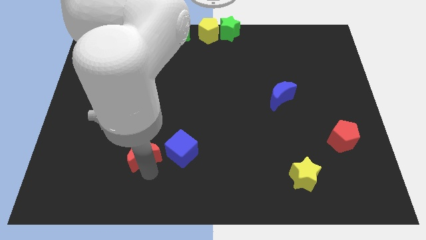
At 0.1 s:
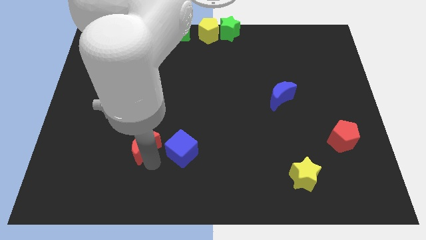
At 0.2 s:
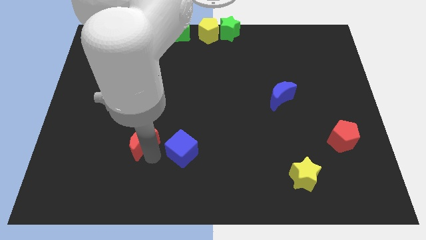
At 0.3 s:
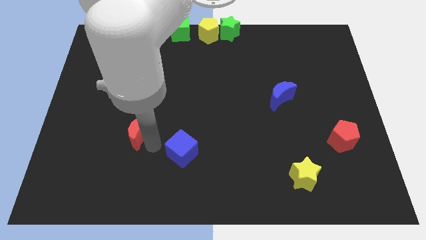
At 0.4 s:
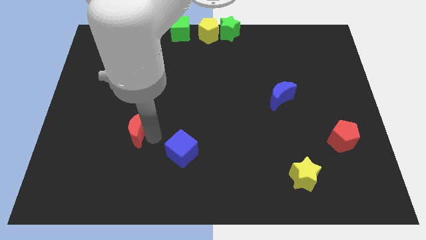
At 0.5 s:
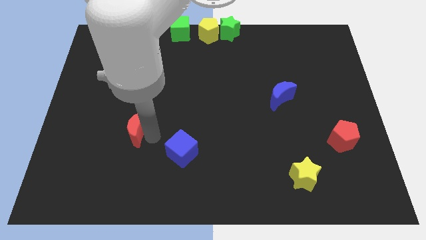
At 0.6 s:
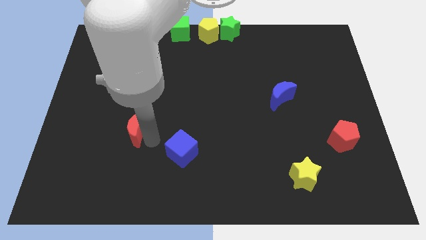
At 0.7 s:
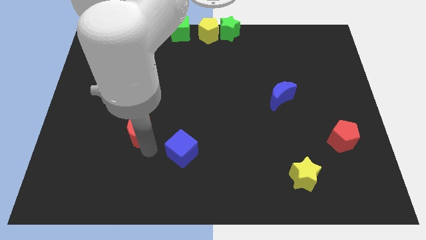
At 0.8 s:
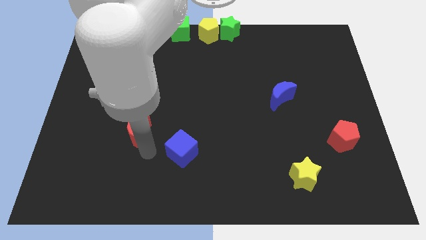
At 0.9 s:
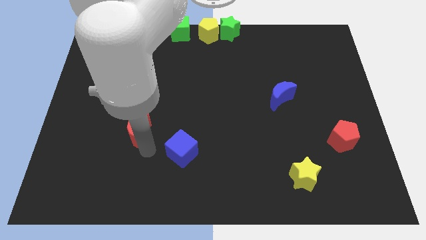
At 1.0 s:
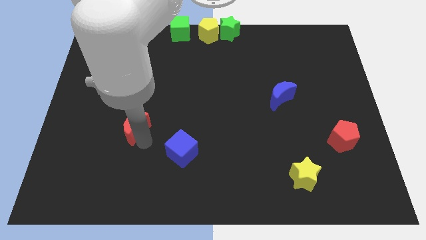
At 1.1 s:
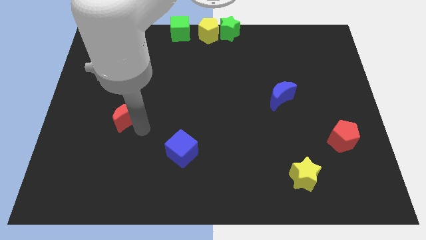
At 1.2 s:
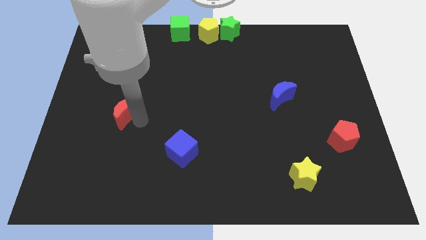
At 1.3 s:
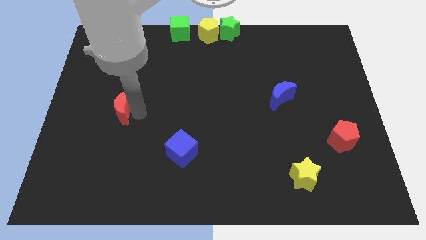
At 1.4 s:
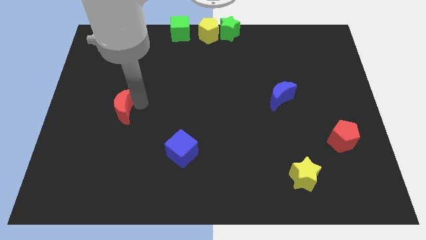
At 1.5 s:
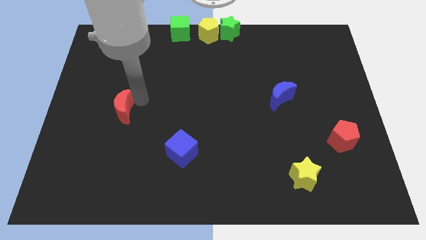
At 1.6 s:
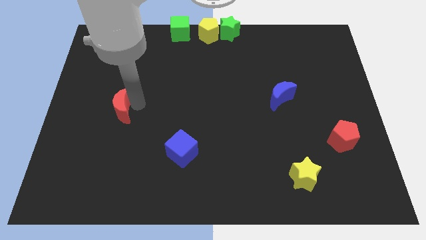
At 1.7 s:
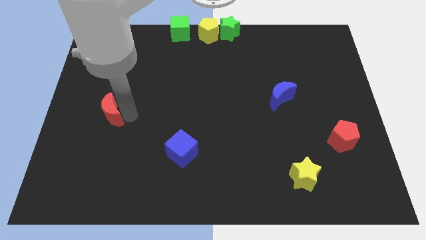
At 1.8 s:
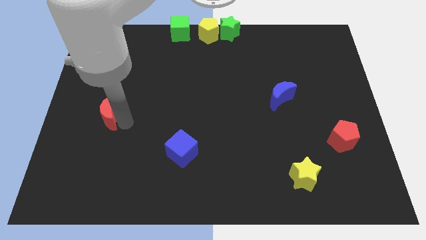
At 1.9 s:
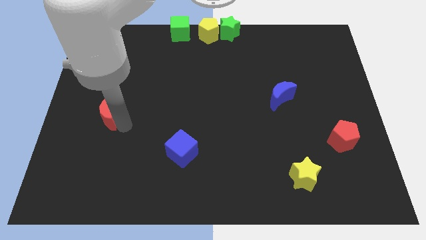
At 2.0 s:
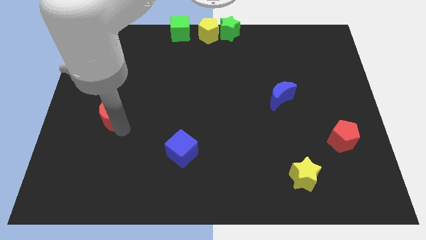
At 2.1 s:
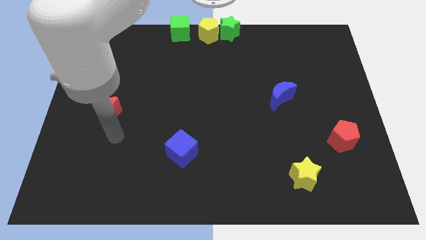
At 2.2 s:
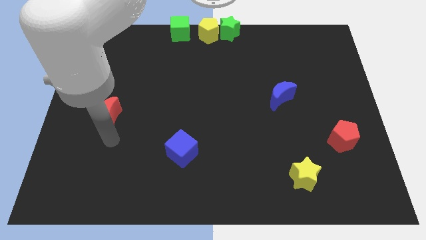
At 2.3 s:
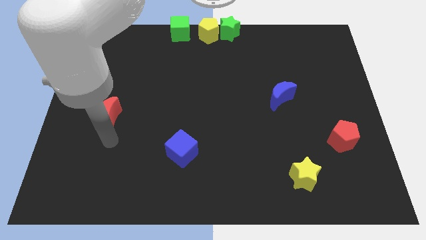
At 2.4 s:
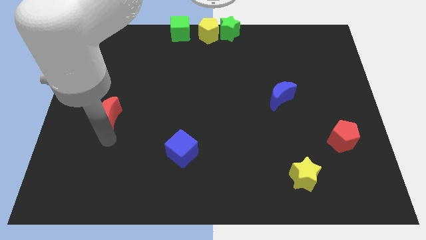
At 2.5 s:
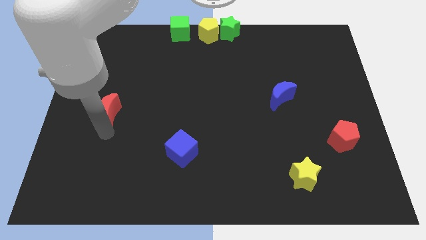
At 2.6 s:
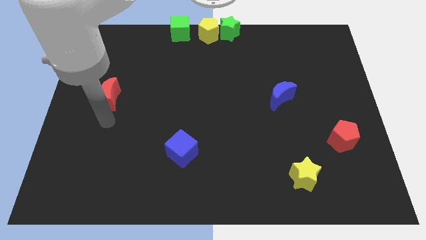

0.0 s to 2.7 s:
place the red crescent at left center of the board

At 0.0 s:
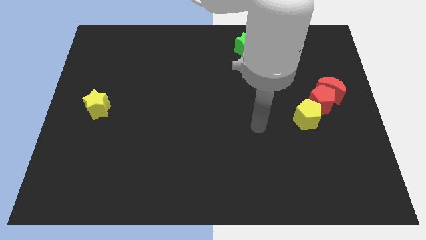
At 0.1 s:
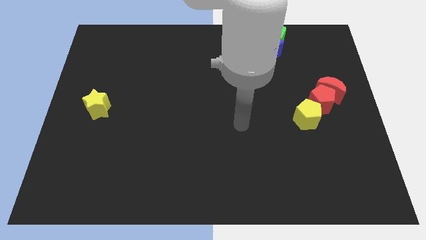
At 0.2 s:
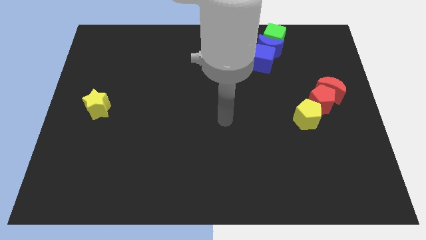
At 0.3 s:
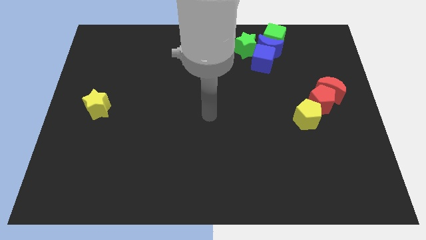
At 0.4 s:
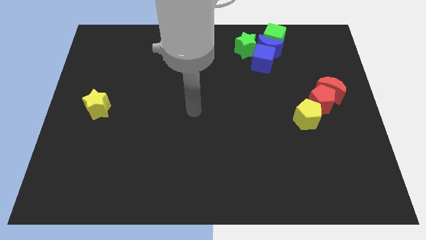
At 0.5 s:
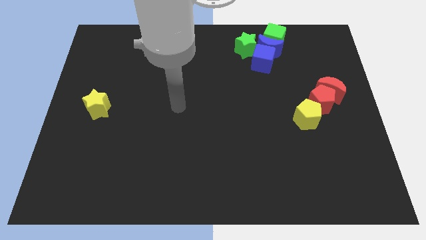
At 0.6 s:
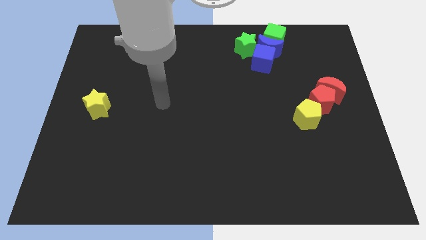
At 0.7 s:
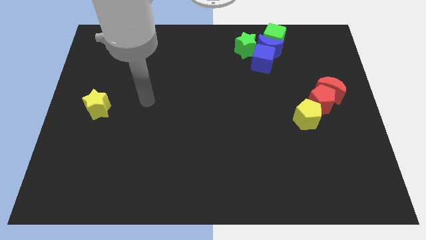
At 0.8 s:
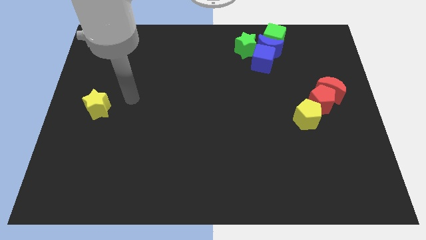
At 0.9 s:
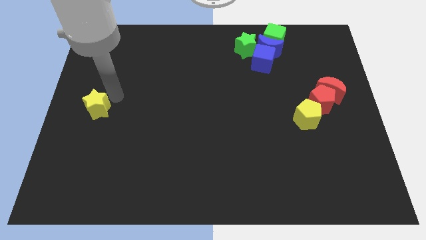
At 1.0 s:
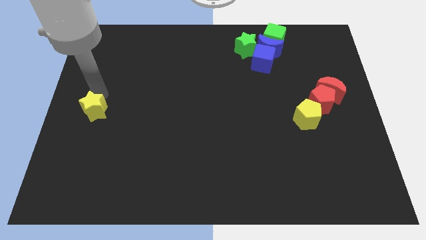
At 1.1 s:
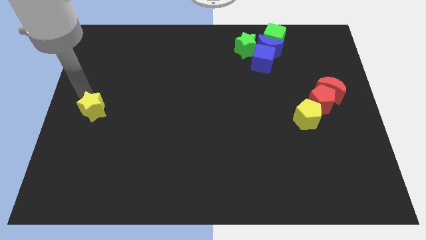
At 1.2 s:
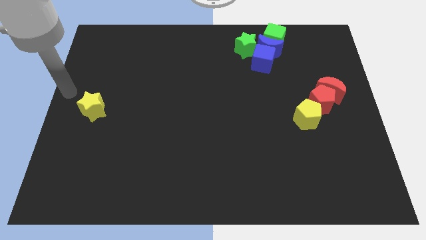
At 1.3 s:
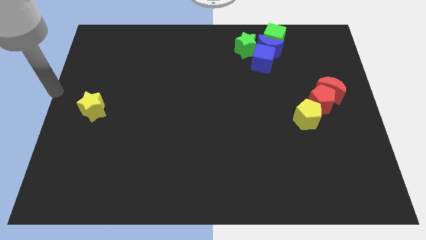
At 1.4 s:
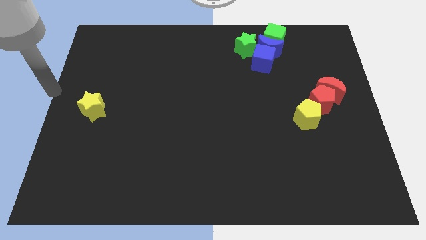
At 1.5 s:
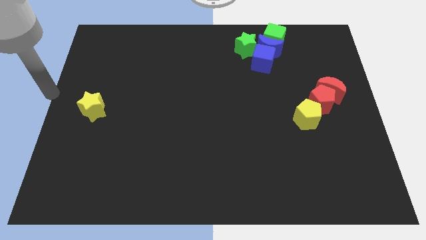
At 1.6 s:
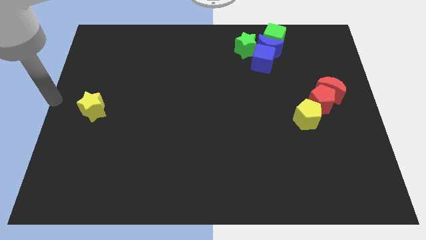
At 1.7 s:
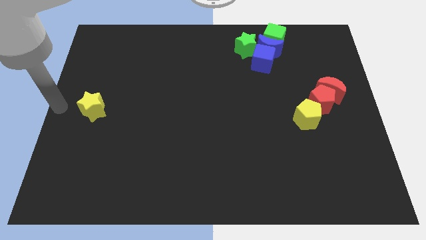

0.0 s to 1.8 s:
point your hand at the center left of the board

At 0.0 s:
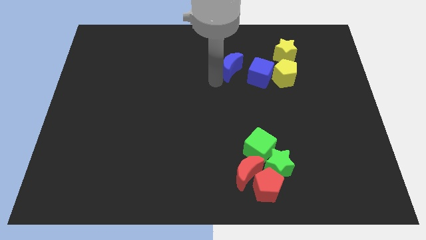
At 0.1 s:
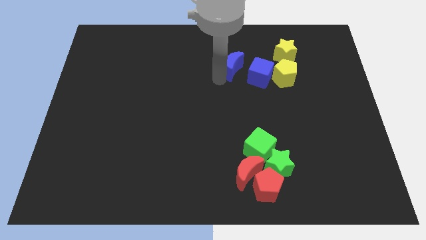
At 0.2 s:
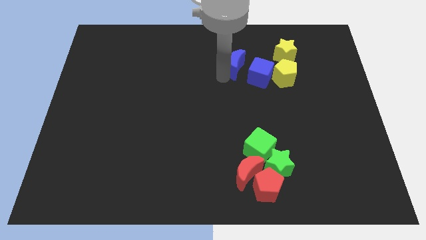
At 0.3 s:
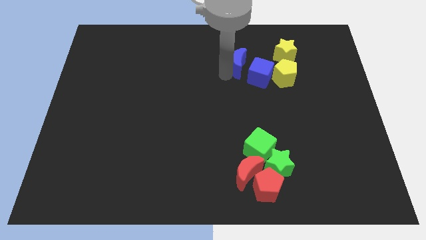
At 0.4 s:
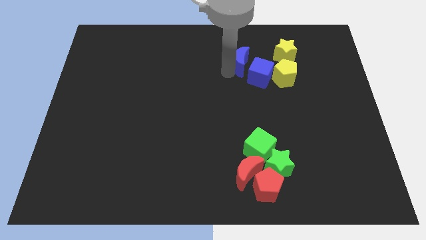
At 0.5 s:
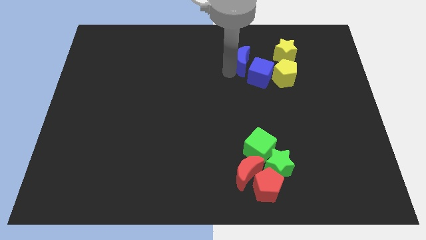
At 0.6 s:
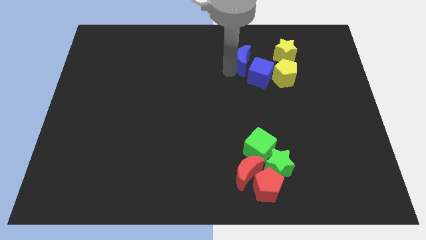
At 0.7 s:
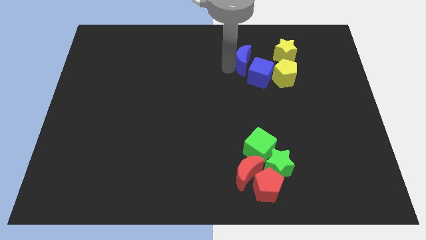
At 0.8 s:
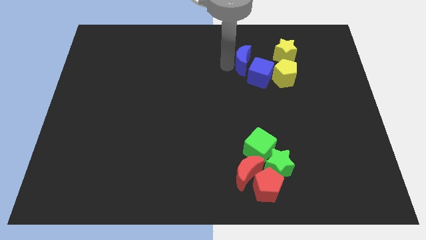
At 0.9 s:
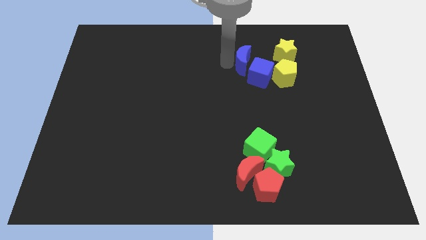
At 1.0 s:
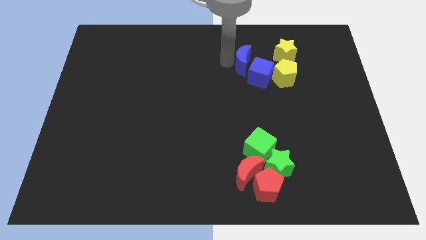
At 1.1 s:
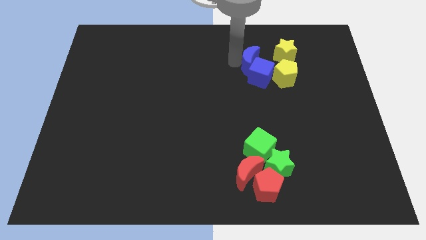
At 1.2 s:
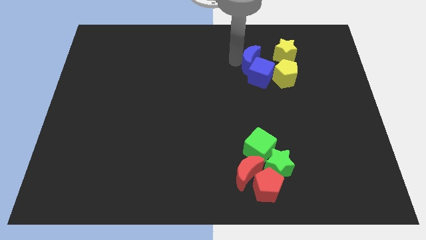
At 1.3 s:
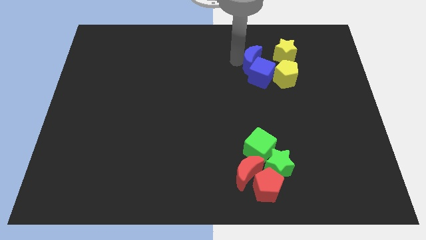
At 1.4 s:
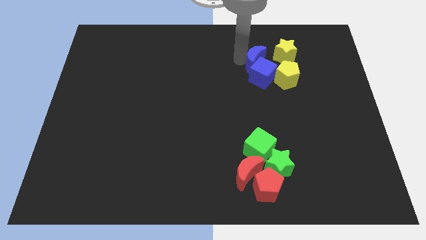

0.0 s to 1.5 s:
slide the blue crescent into the blue cube

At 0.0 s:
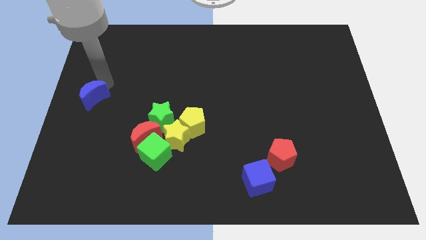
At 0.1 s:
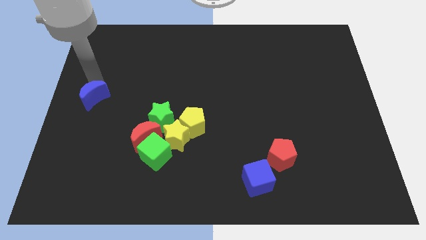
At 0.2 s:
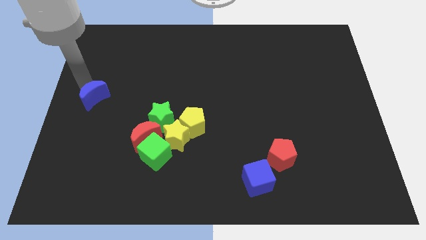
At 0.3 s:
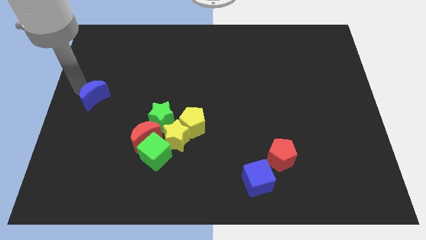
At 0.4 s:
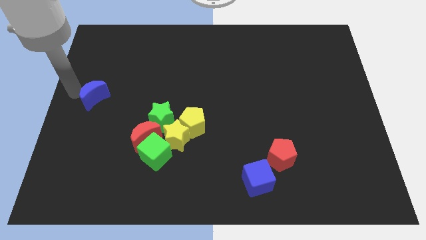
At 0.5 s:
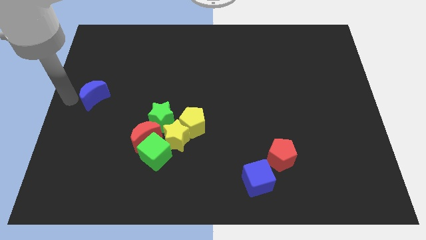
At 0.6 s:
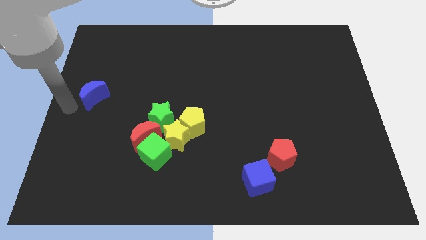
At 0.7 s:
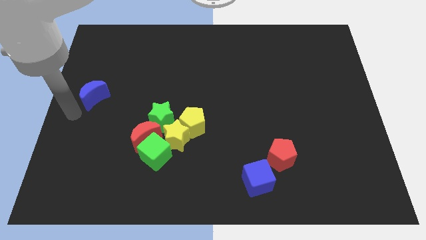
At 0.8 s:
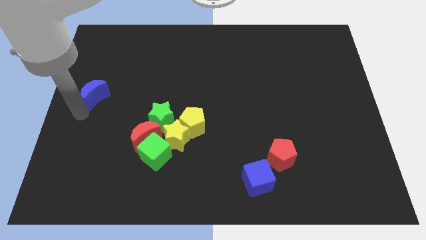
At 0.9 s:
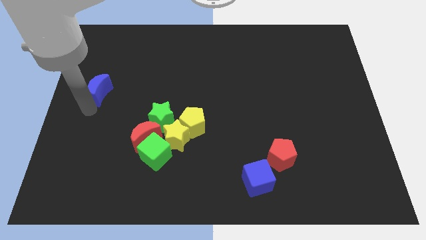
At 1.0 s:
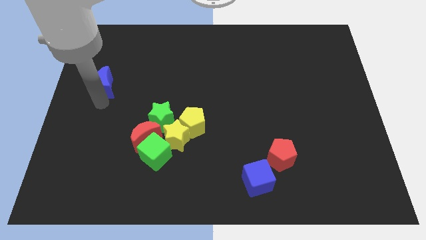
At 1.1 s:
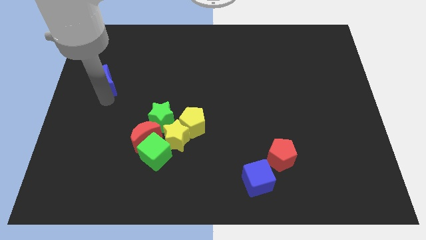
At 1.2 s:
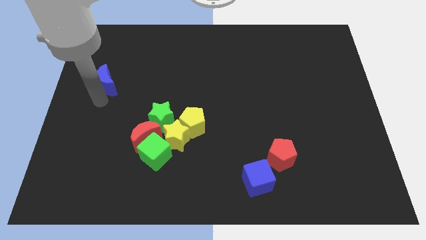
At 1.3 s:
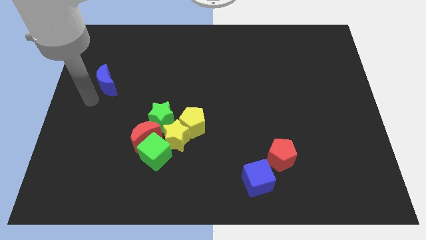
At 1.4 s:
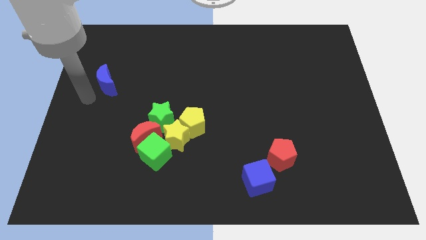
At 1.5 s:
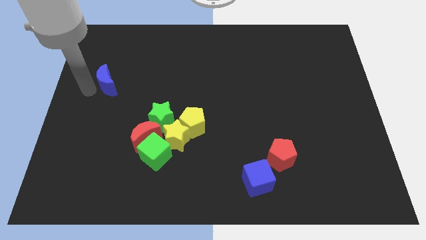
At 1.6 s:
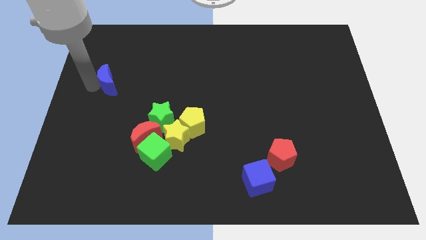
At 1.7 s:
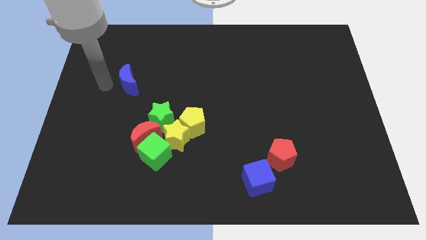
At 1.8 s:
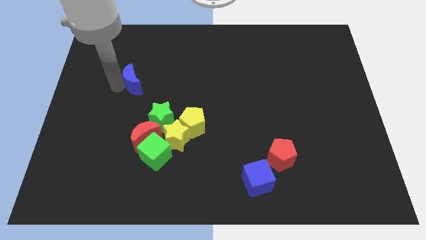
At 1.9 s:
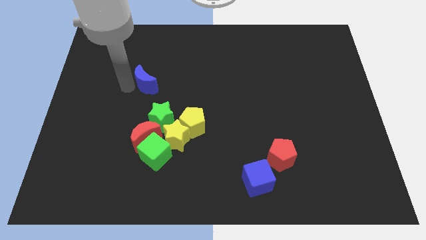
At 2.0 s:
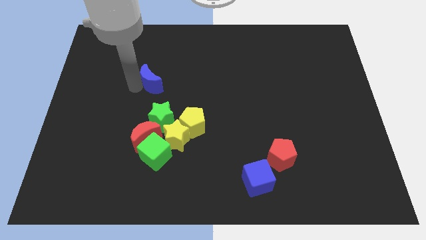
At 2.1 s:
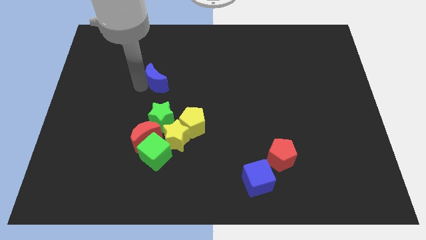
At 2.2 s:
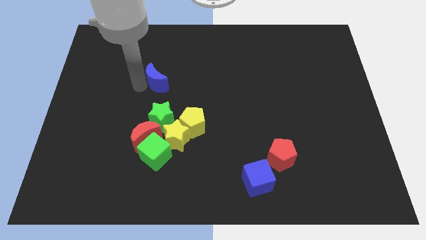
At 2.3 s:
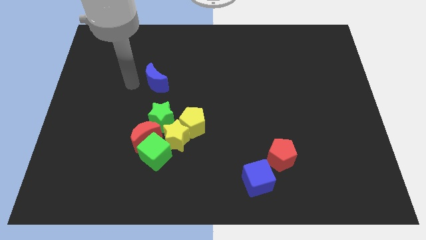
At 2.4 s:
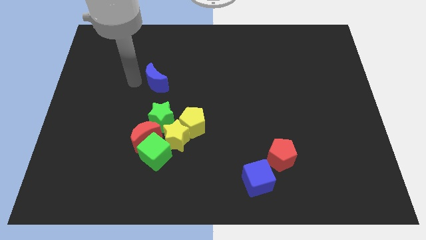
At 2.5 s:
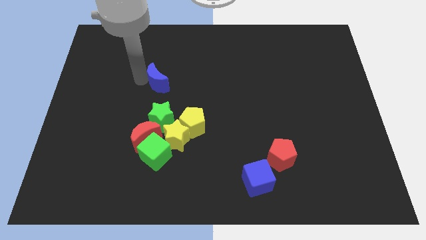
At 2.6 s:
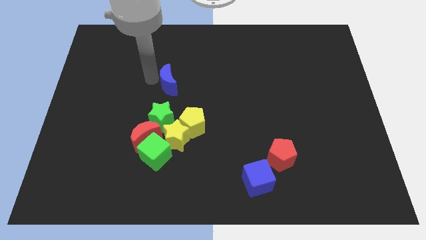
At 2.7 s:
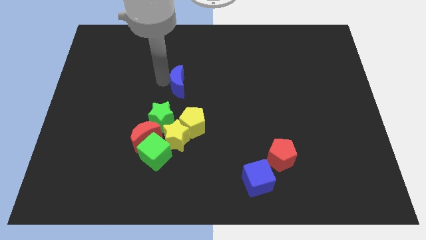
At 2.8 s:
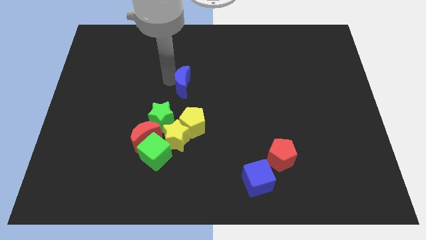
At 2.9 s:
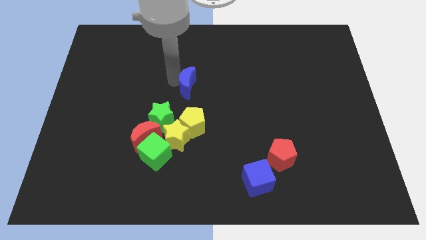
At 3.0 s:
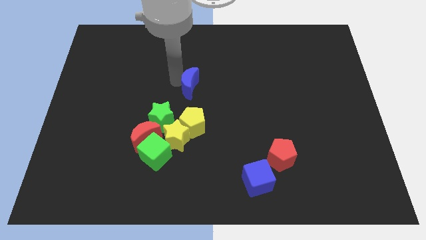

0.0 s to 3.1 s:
move the blue crescent vertical parallel to the yellow pentagon
